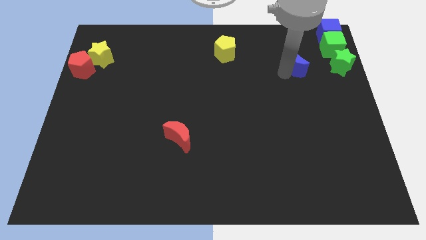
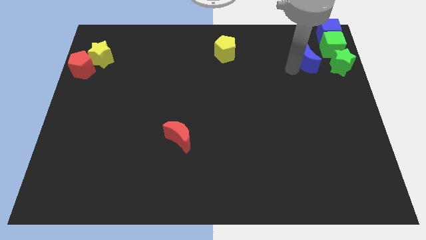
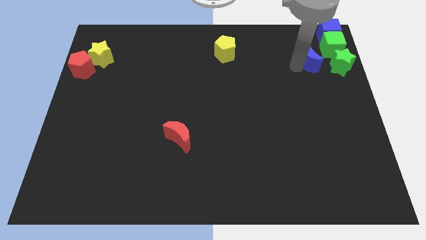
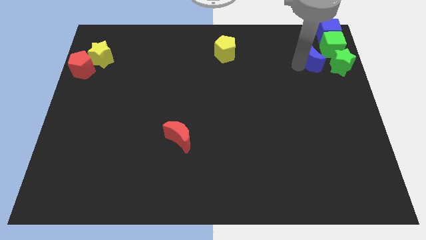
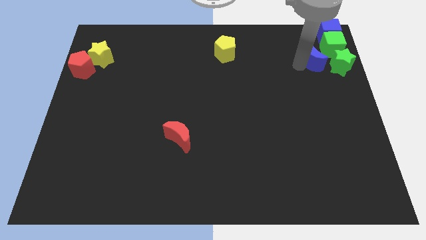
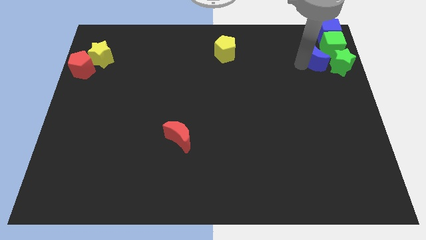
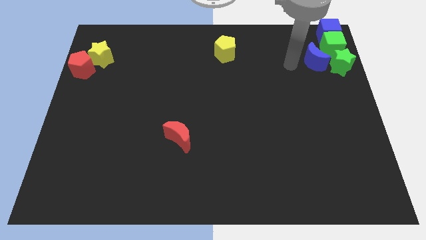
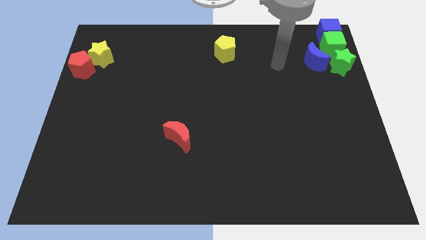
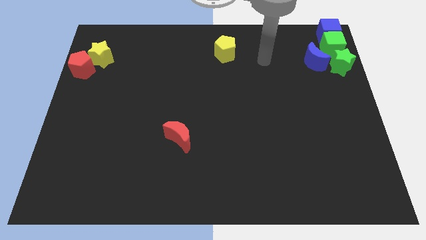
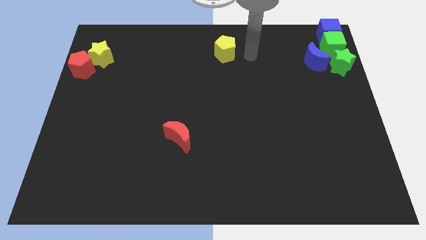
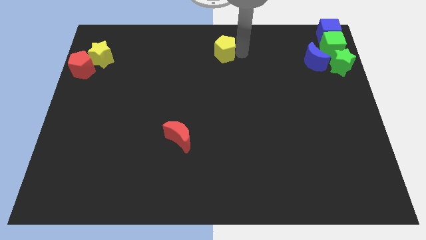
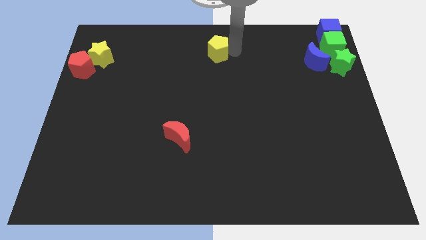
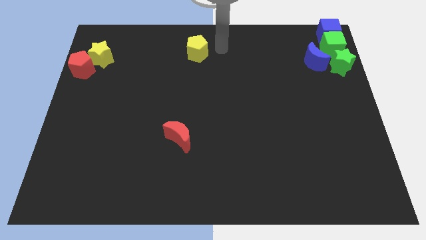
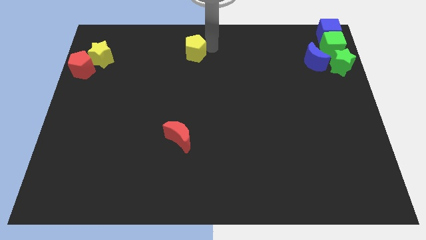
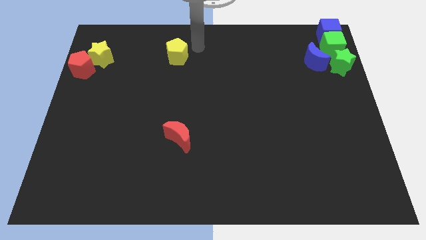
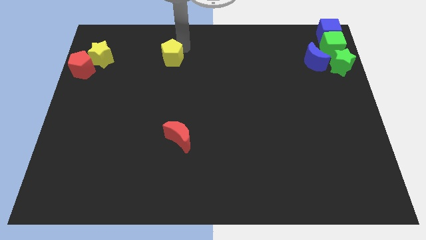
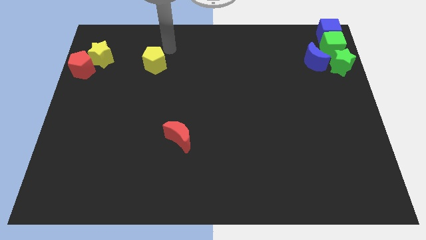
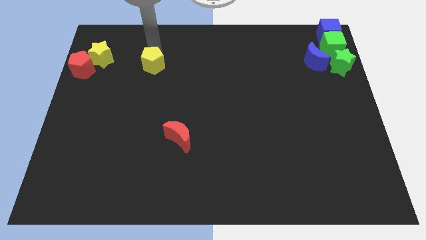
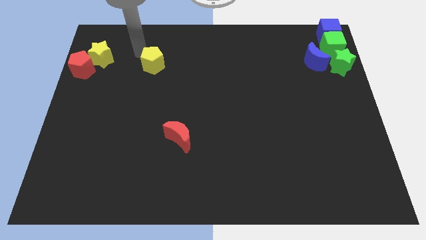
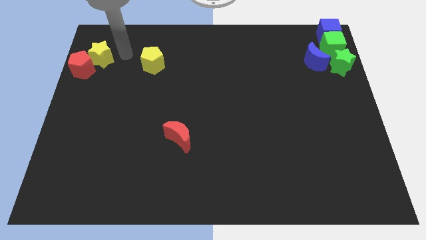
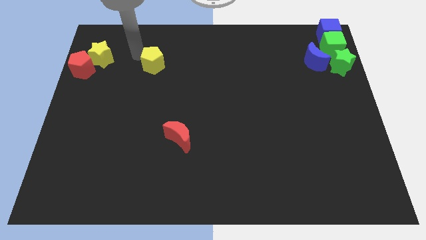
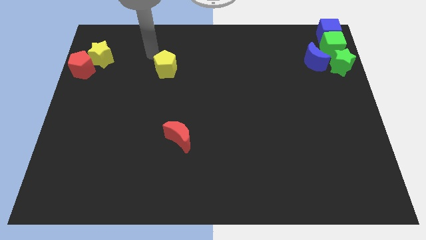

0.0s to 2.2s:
push the yellow pentagon slightly to the left

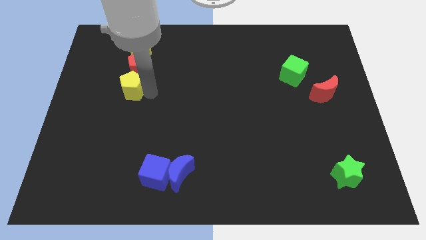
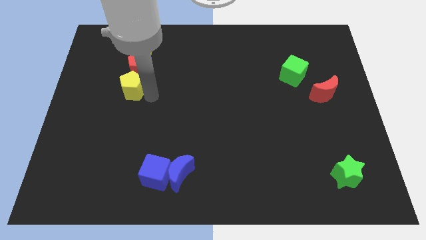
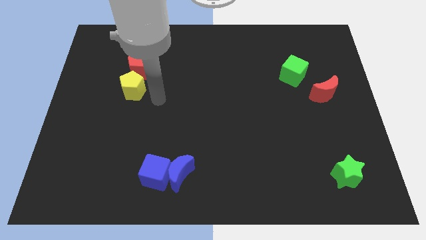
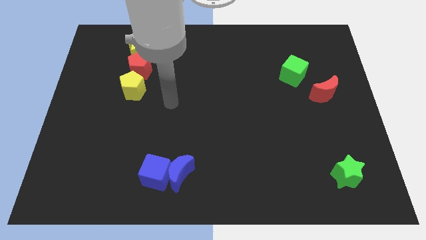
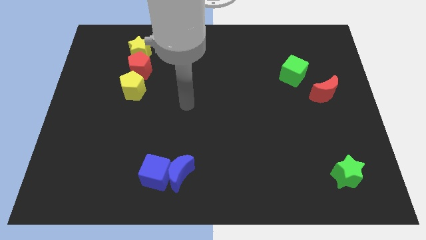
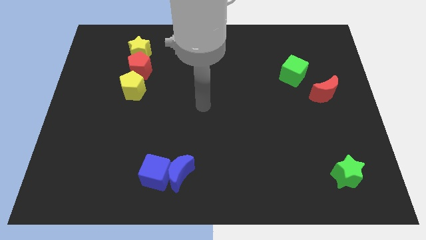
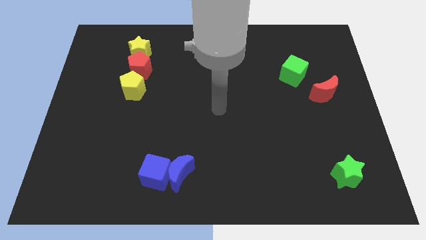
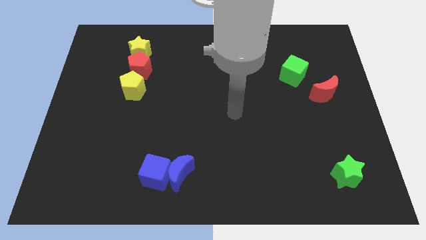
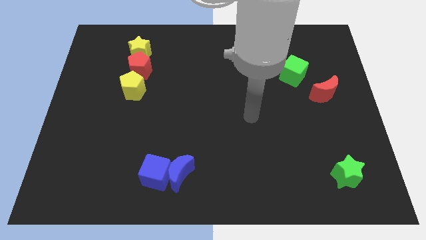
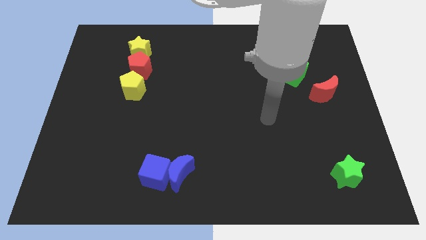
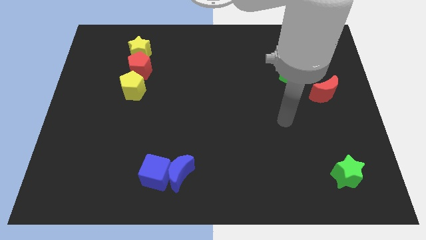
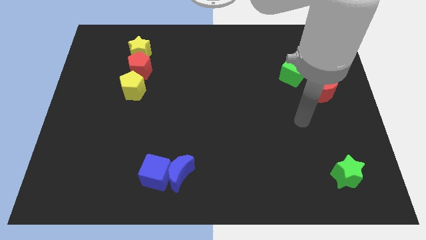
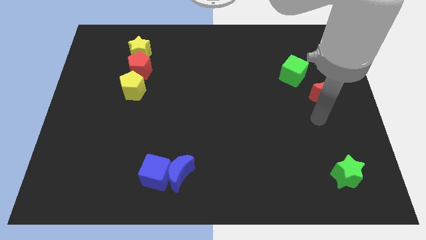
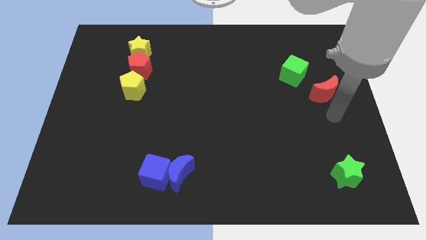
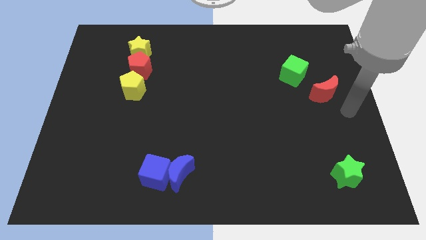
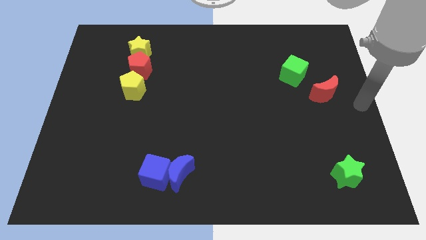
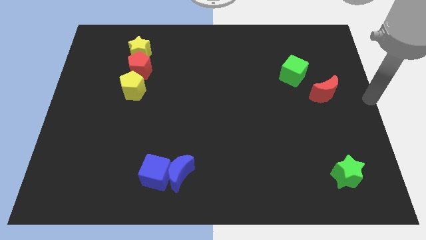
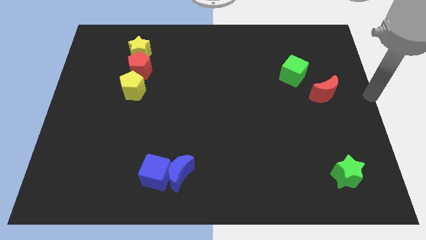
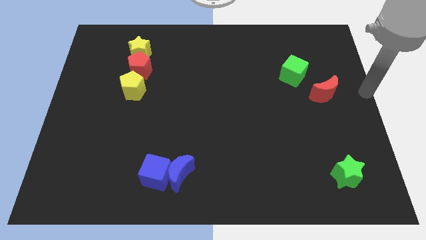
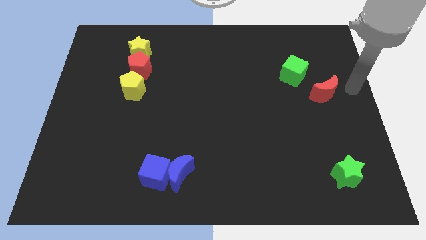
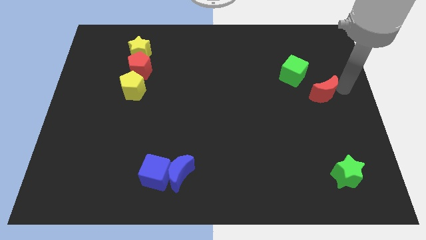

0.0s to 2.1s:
point your arm to the right of red moon

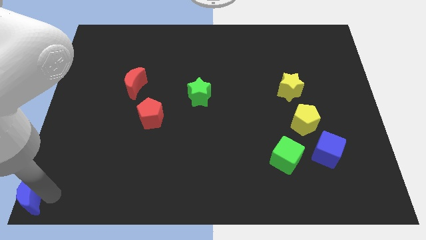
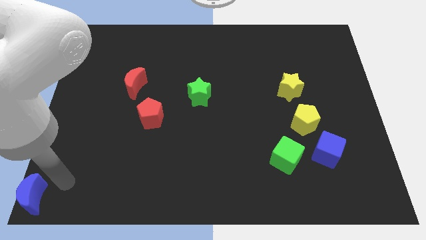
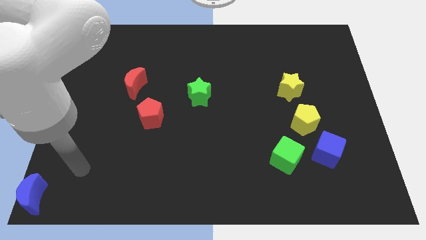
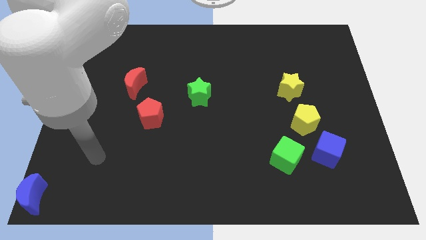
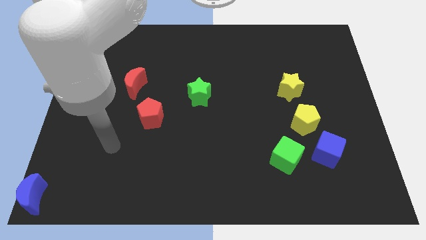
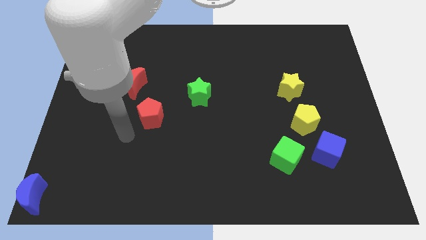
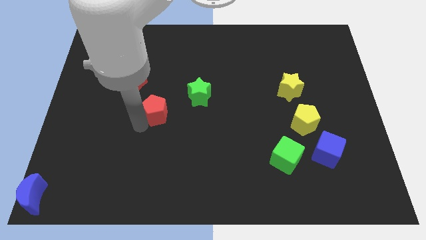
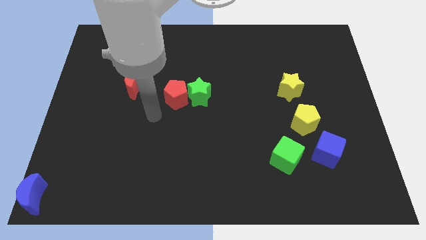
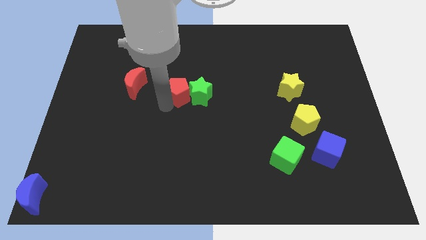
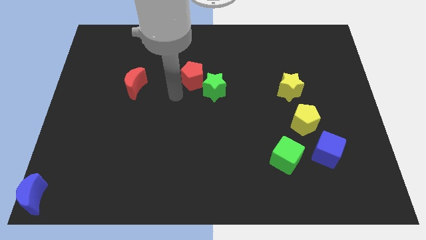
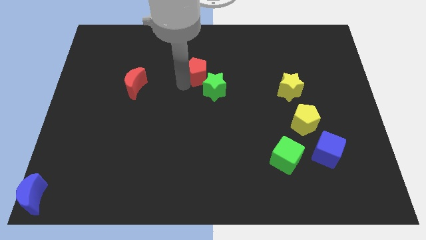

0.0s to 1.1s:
slide red pentagon into green star

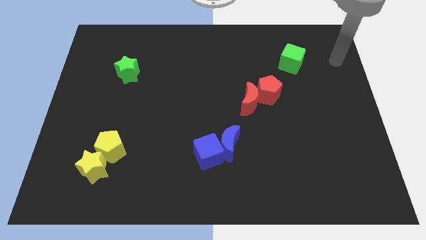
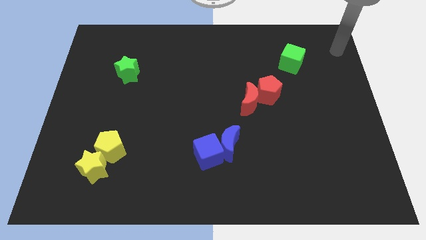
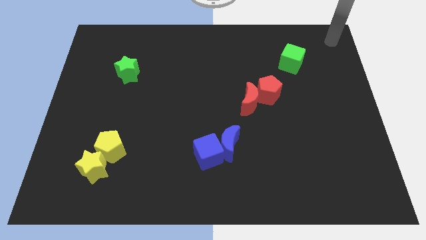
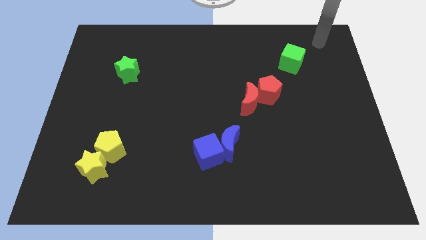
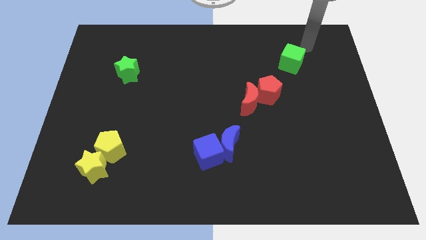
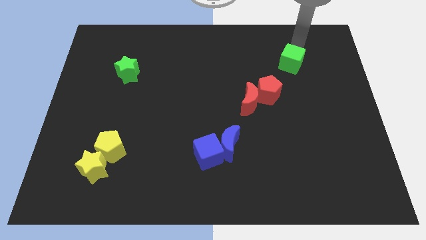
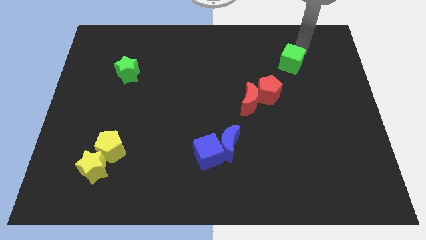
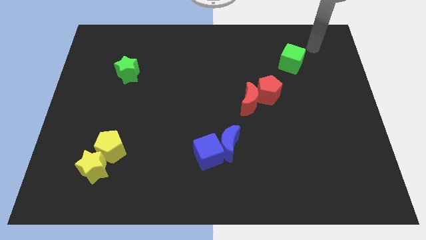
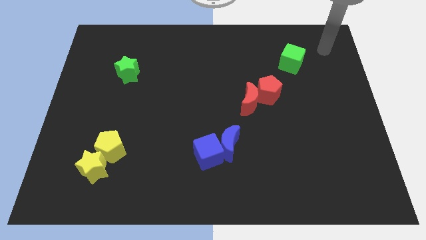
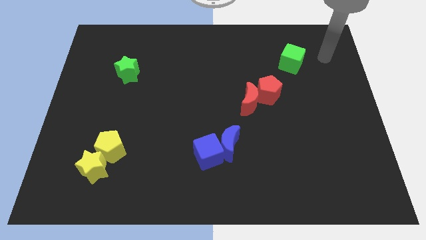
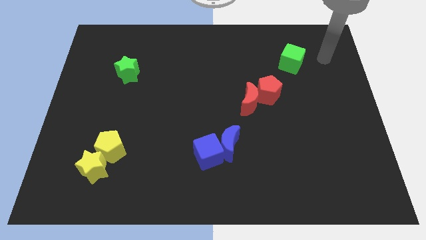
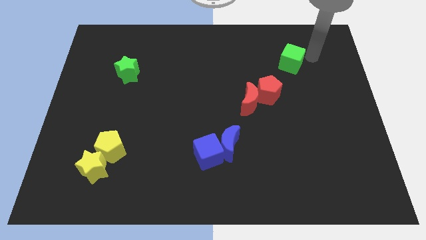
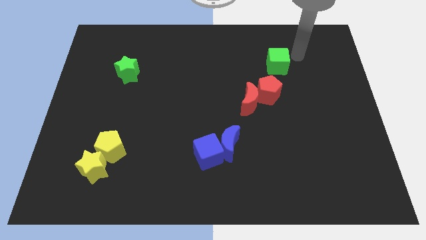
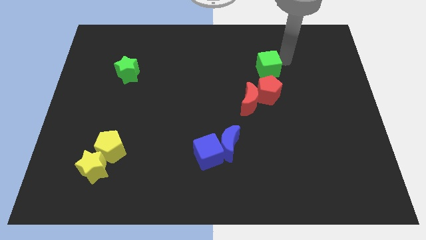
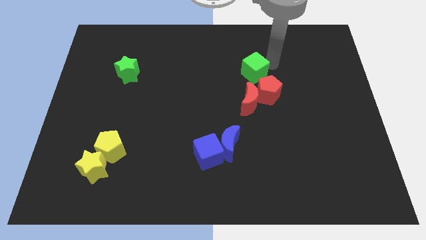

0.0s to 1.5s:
put the green cube above the red pentagon

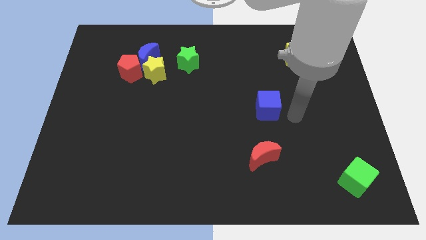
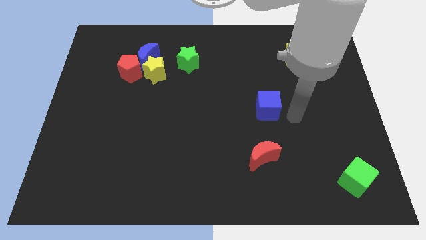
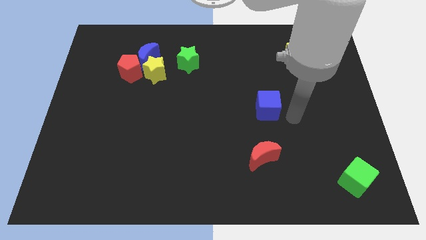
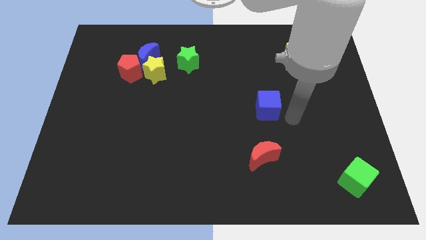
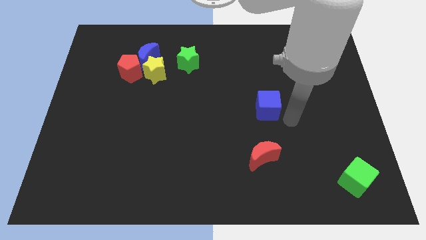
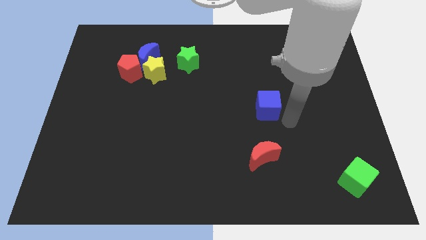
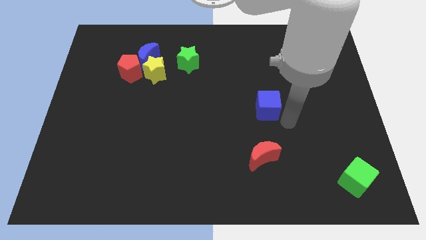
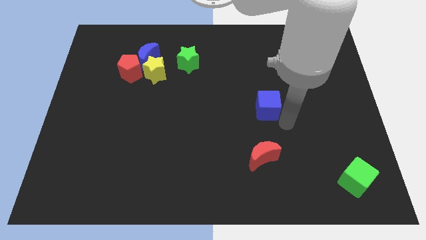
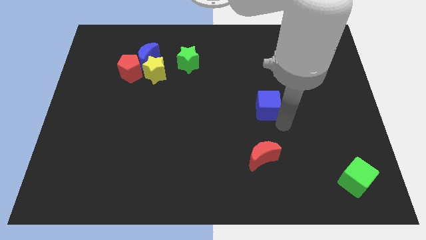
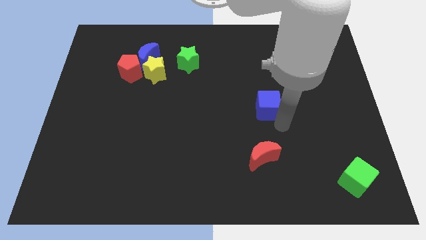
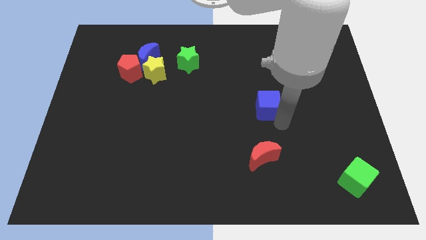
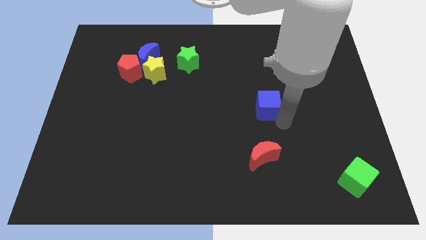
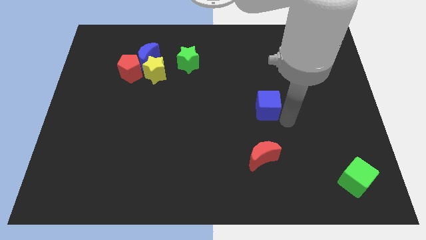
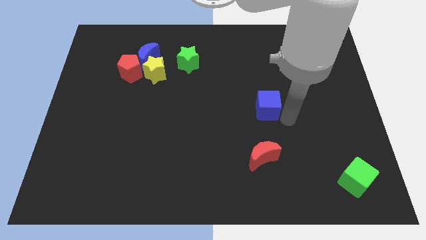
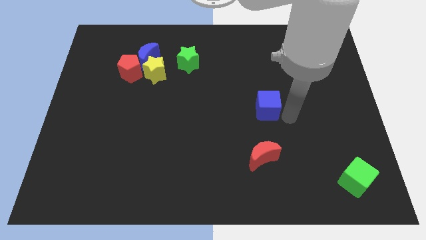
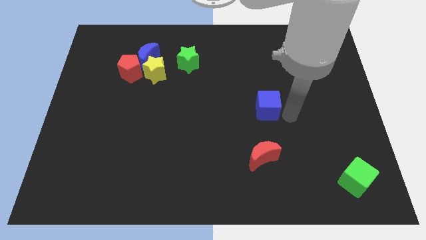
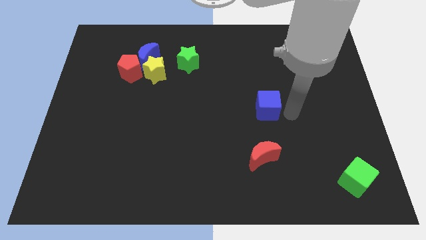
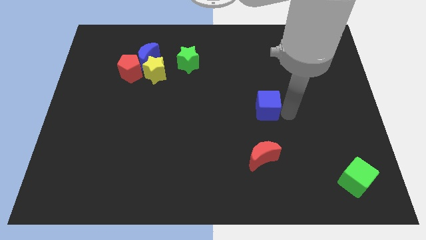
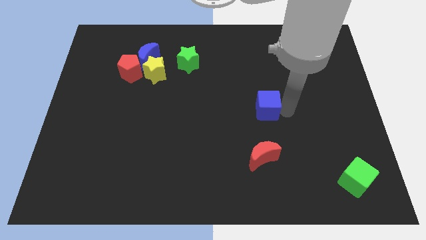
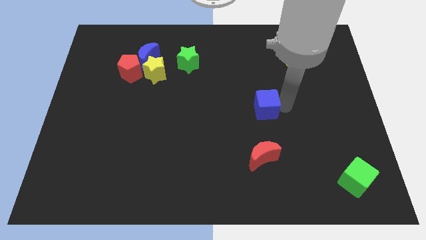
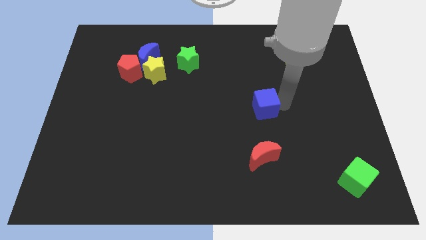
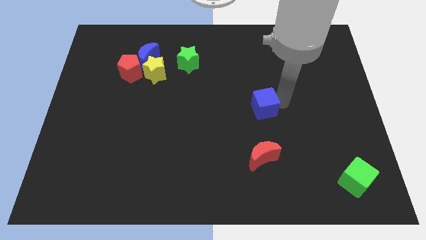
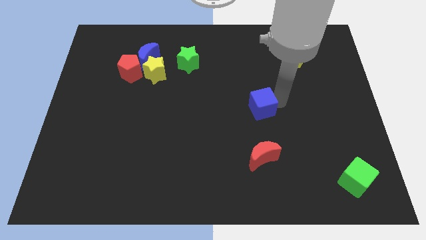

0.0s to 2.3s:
move the blue cube slightly to the left
